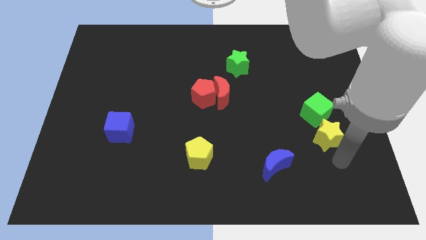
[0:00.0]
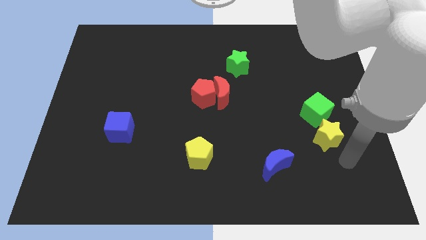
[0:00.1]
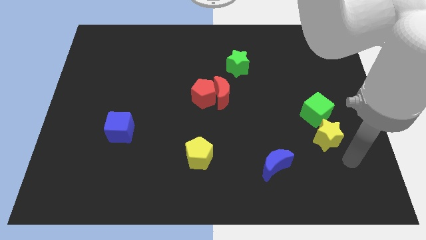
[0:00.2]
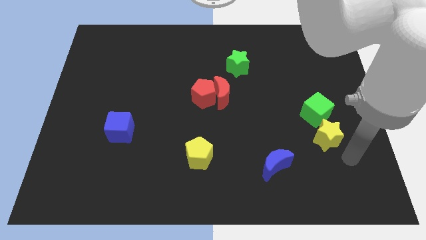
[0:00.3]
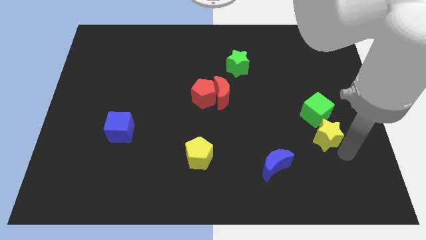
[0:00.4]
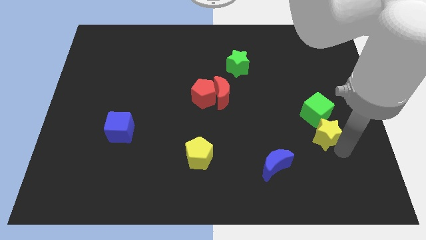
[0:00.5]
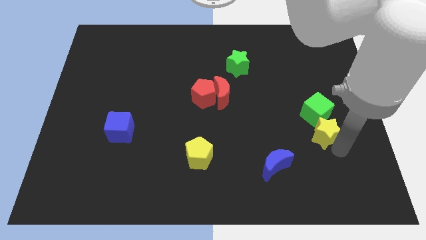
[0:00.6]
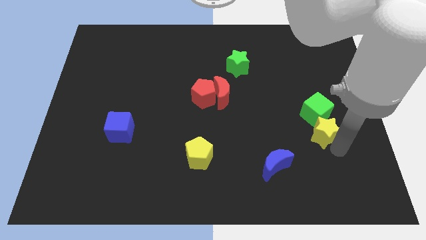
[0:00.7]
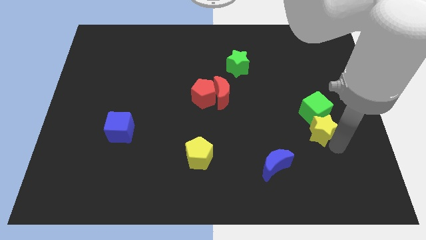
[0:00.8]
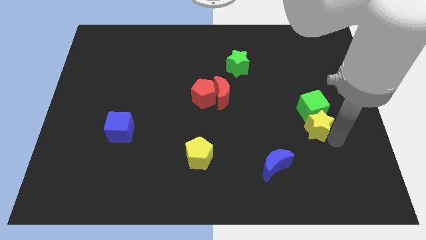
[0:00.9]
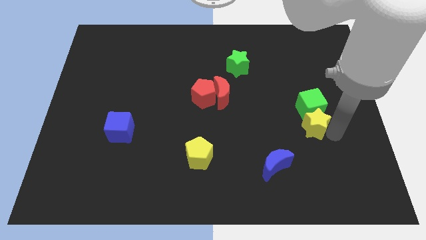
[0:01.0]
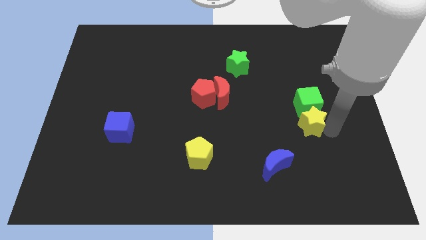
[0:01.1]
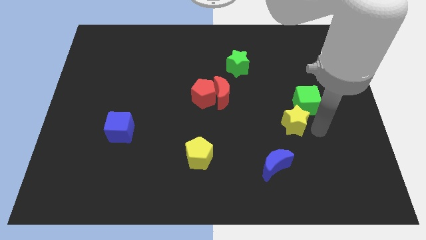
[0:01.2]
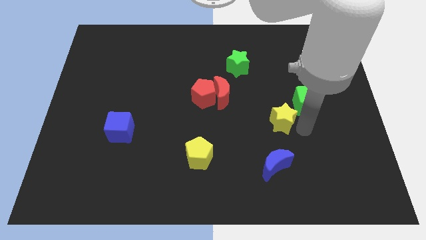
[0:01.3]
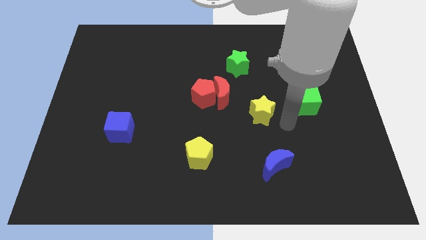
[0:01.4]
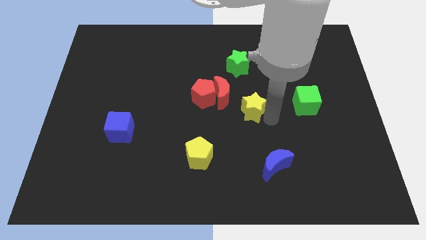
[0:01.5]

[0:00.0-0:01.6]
push yellow star below green star

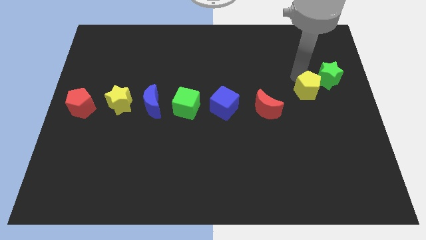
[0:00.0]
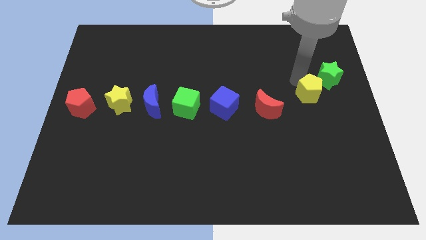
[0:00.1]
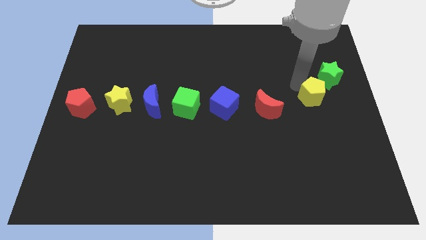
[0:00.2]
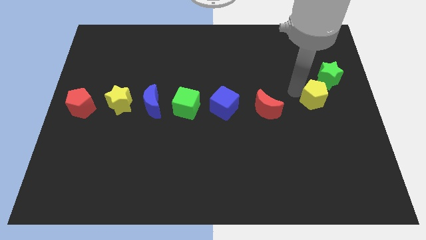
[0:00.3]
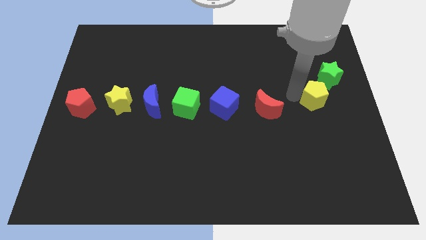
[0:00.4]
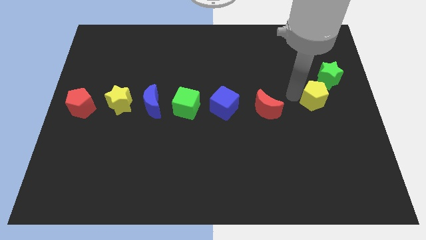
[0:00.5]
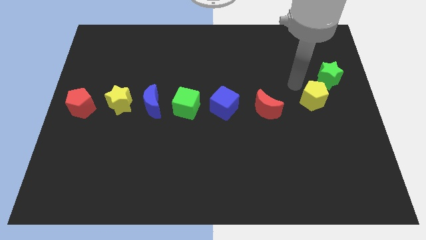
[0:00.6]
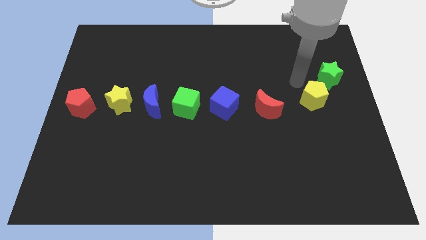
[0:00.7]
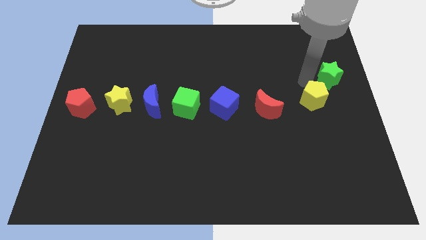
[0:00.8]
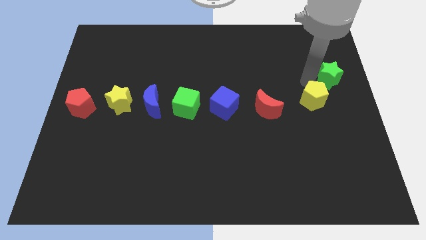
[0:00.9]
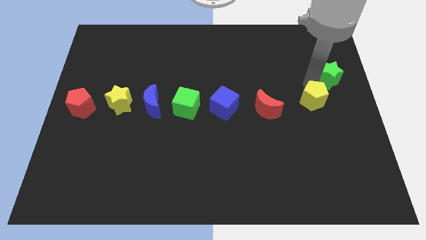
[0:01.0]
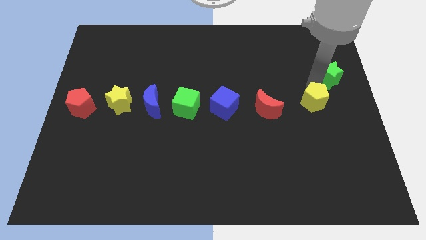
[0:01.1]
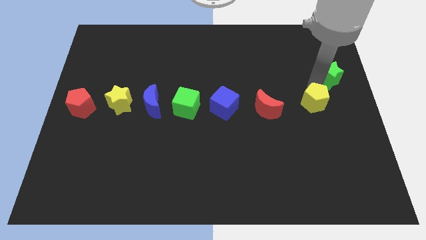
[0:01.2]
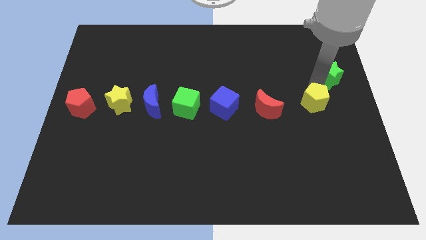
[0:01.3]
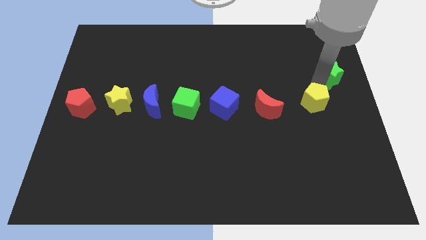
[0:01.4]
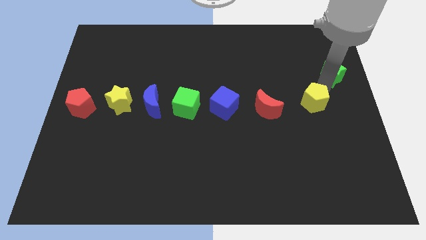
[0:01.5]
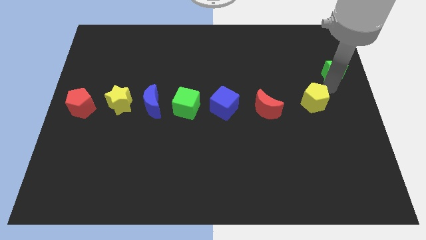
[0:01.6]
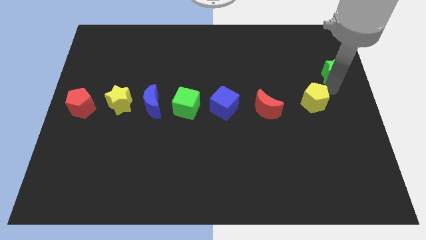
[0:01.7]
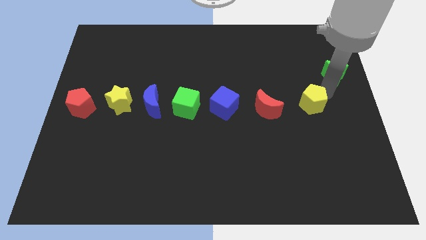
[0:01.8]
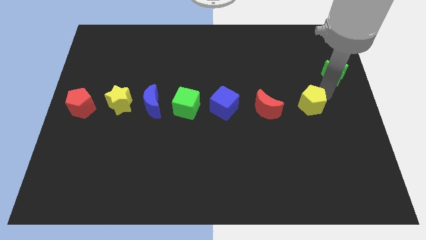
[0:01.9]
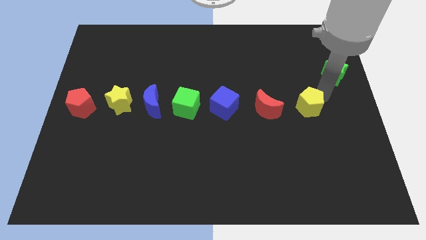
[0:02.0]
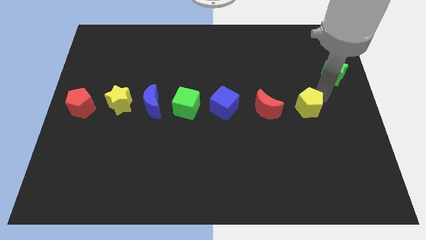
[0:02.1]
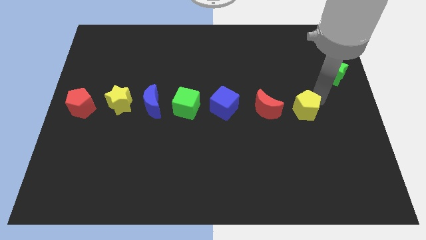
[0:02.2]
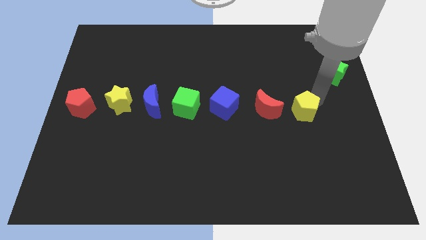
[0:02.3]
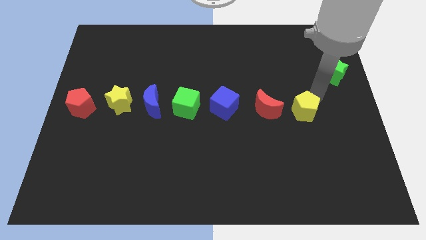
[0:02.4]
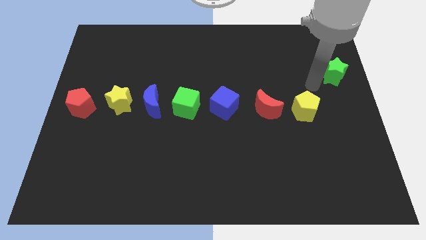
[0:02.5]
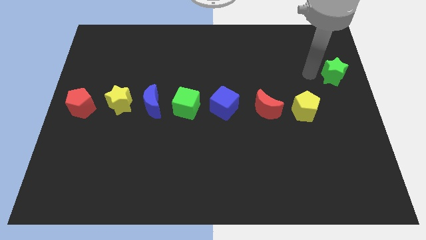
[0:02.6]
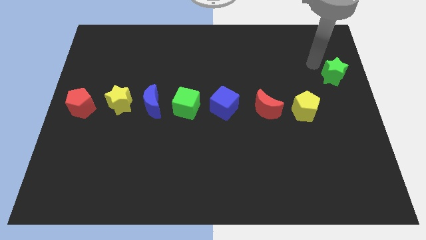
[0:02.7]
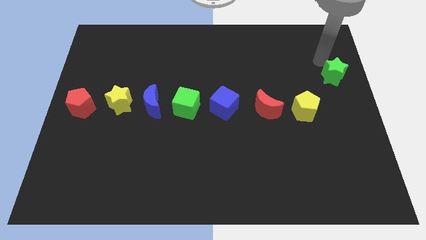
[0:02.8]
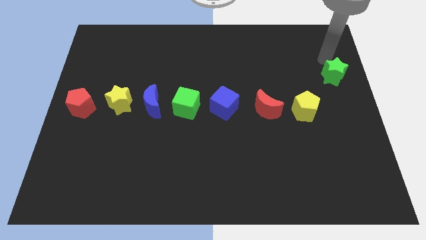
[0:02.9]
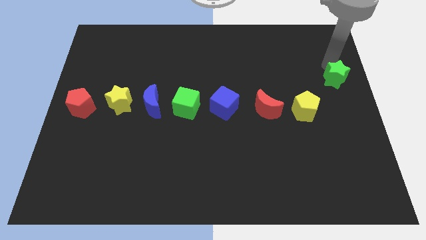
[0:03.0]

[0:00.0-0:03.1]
place the yellow pentagon in horizontal line of blocks

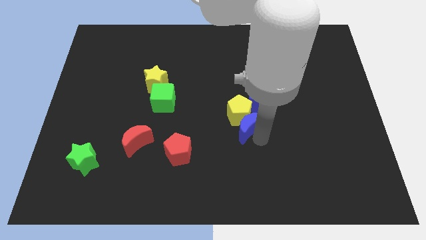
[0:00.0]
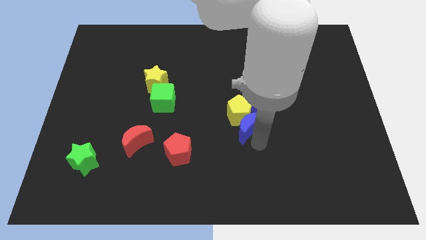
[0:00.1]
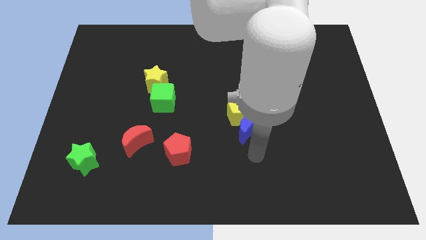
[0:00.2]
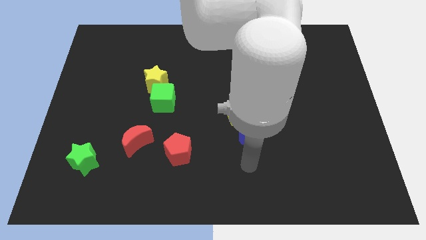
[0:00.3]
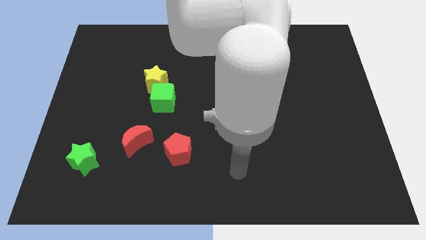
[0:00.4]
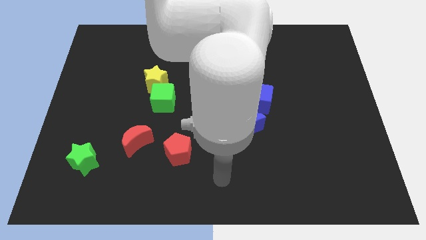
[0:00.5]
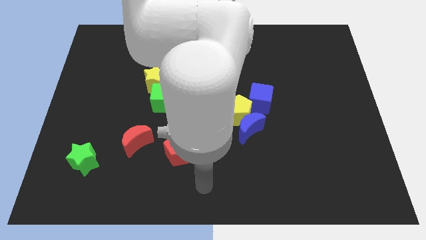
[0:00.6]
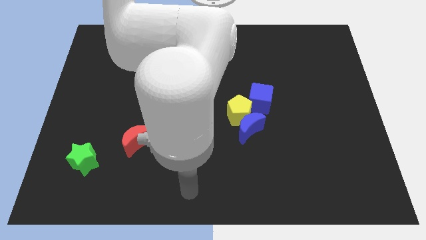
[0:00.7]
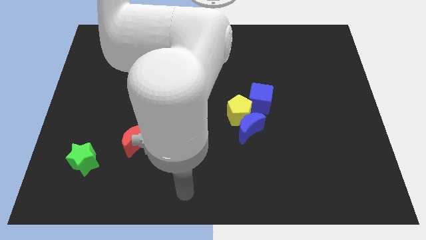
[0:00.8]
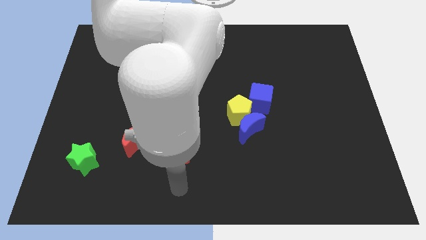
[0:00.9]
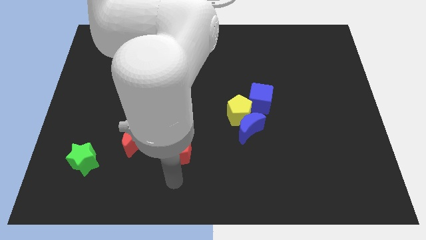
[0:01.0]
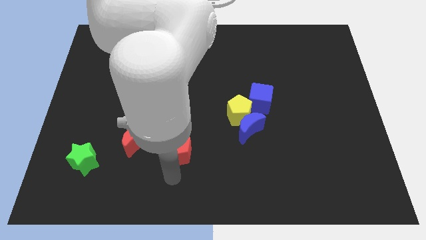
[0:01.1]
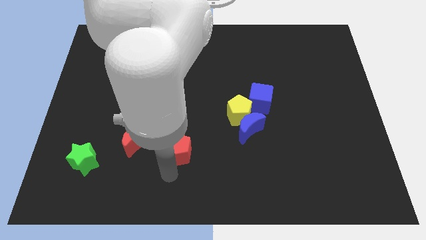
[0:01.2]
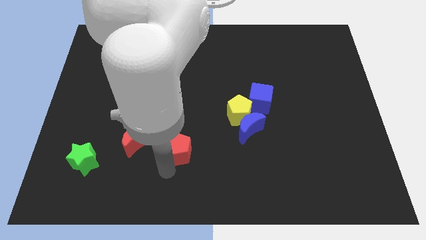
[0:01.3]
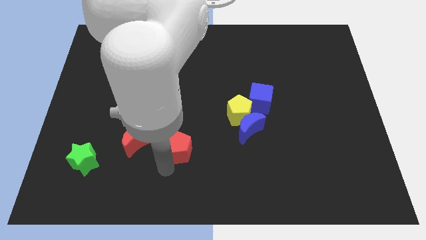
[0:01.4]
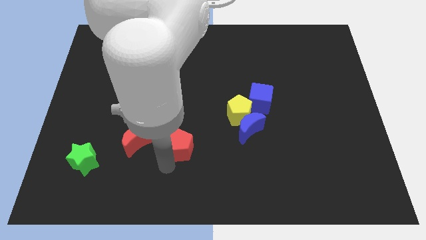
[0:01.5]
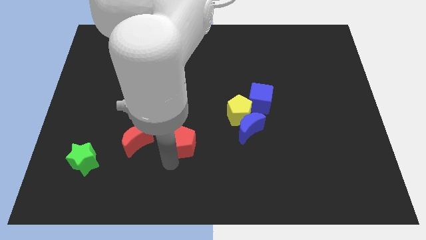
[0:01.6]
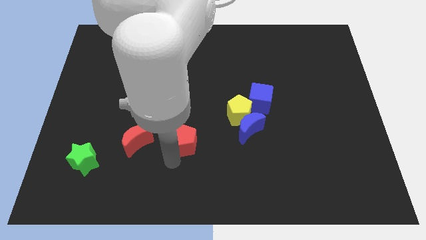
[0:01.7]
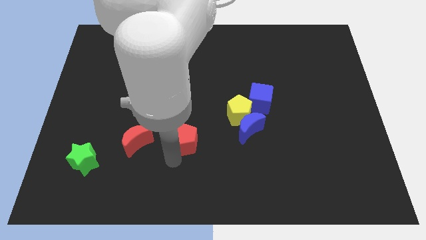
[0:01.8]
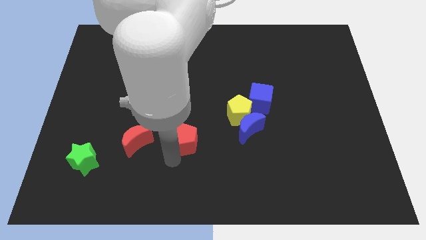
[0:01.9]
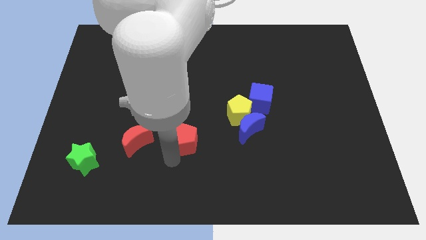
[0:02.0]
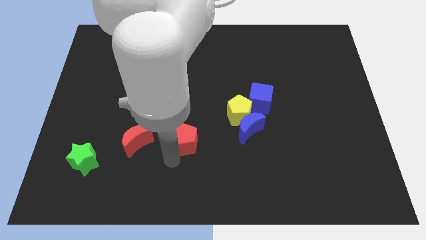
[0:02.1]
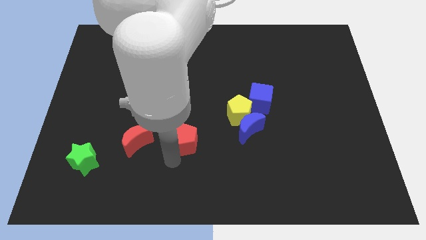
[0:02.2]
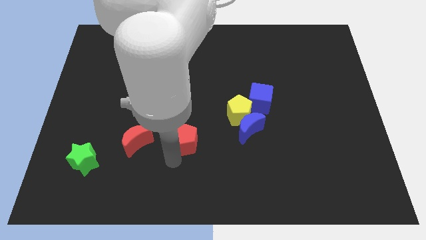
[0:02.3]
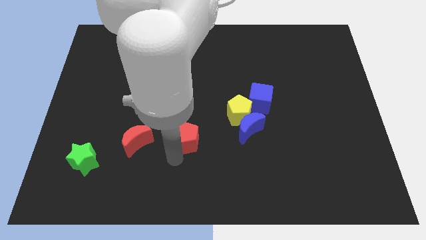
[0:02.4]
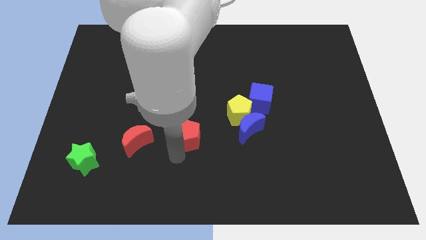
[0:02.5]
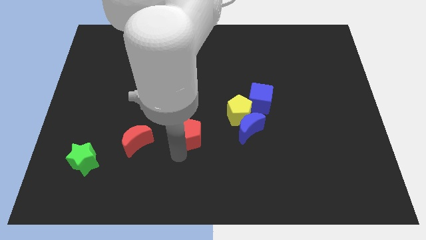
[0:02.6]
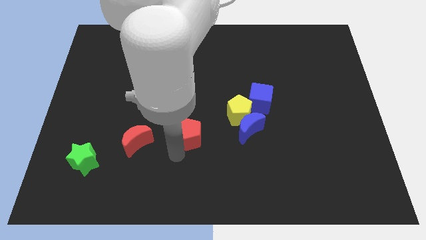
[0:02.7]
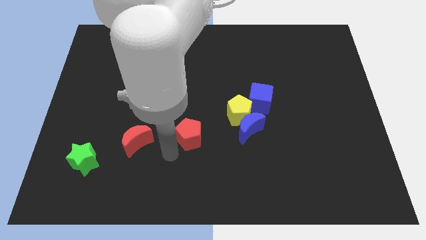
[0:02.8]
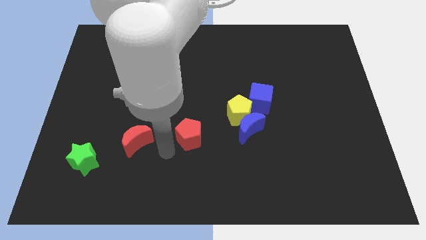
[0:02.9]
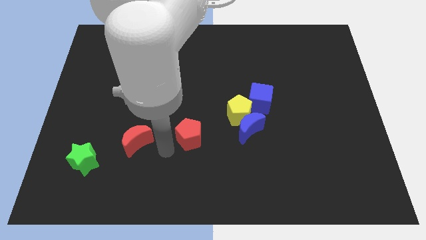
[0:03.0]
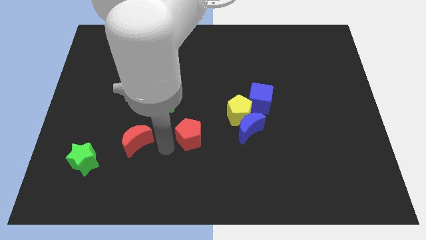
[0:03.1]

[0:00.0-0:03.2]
put the red pentagon right side to the red crescent

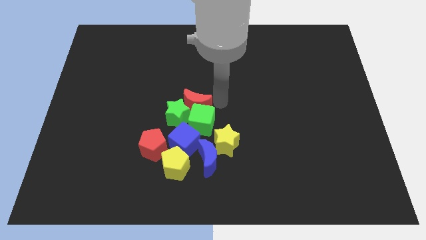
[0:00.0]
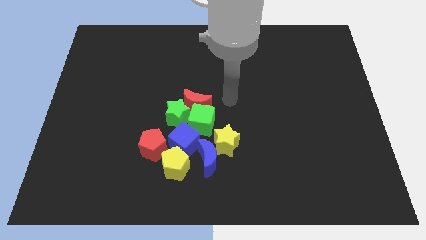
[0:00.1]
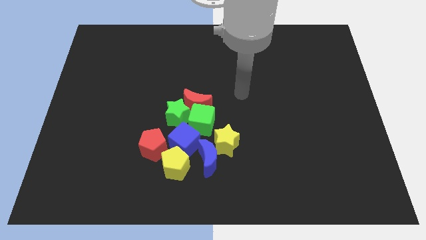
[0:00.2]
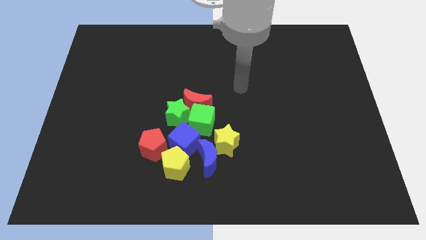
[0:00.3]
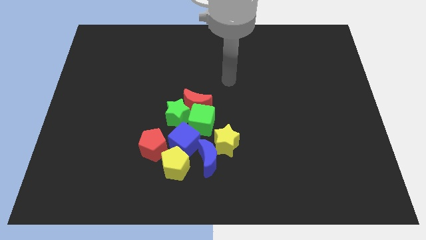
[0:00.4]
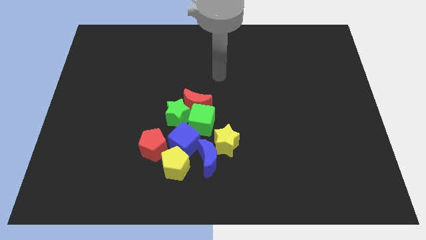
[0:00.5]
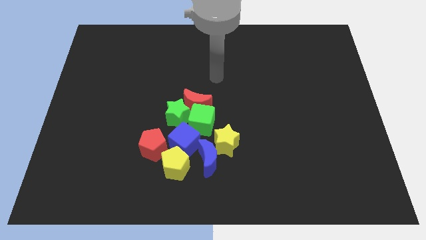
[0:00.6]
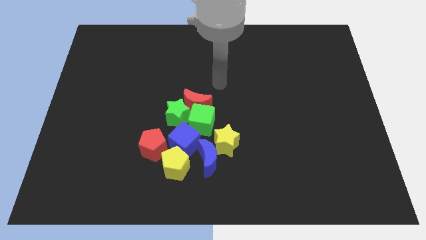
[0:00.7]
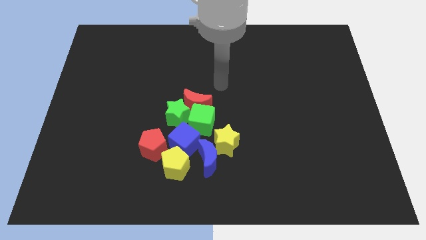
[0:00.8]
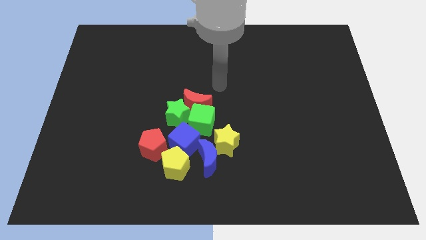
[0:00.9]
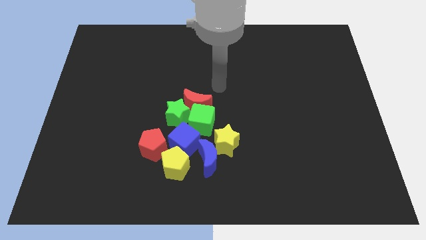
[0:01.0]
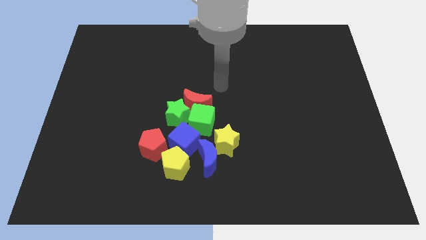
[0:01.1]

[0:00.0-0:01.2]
move the arm away from the red moon
